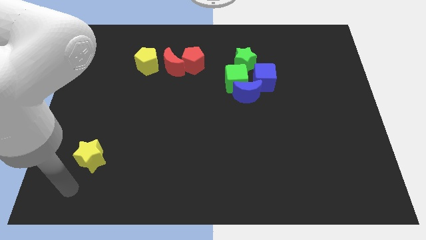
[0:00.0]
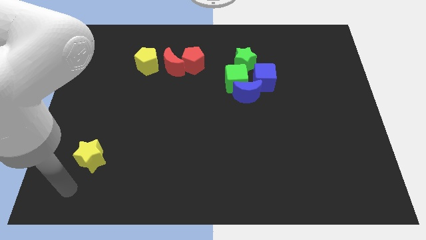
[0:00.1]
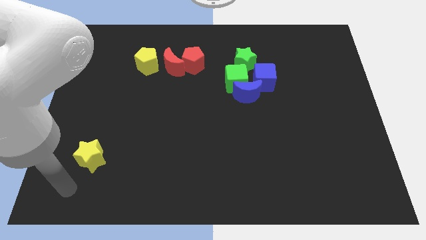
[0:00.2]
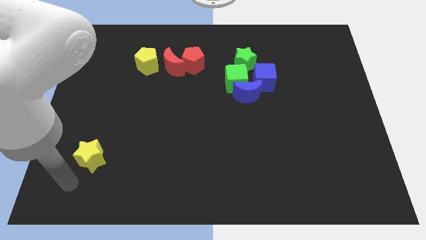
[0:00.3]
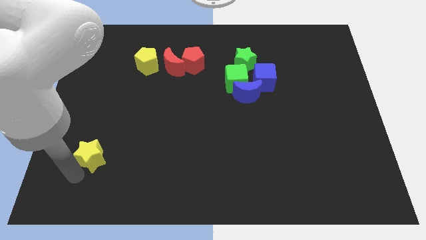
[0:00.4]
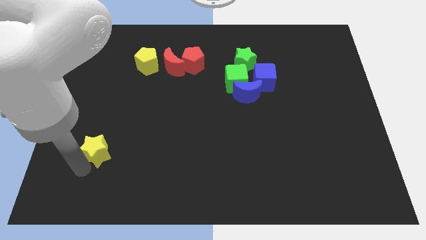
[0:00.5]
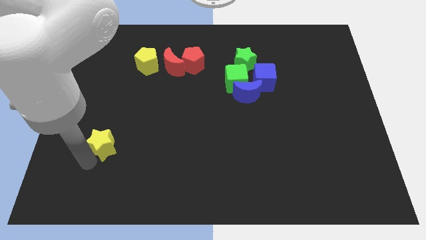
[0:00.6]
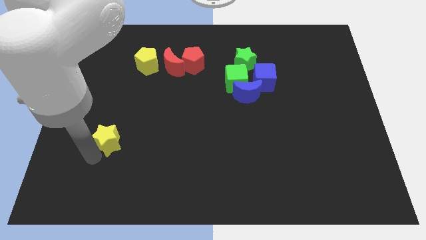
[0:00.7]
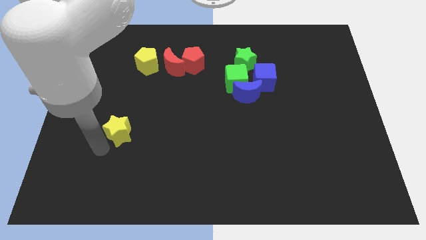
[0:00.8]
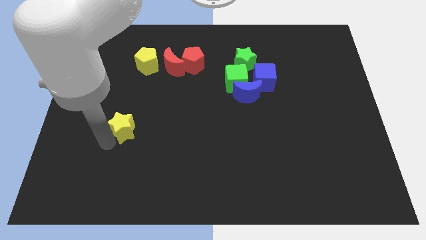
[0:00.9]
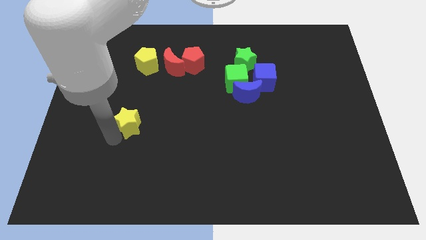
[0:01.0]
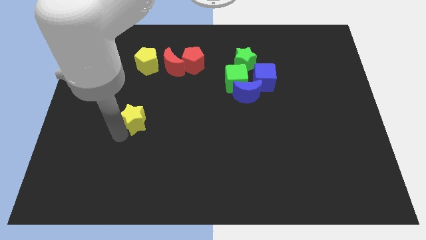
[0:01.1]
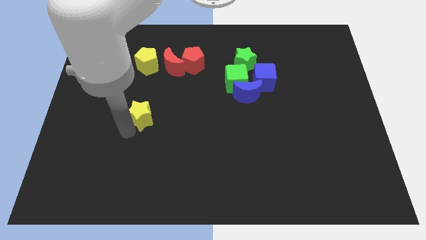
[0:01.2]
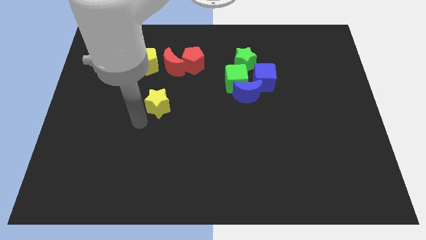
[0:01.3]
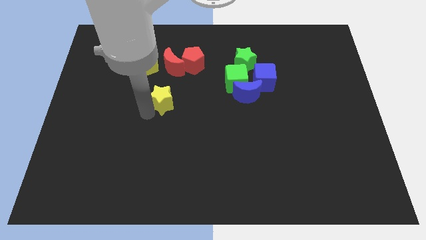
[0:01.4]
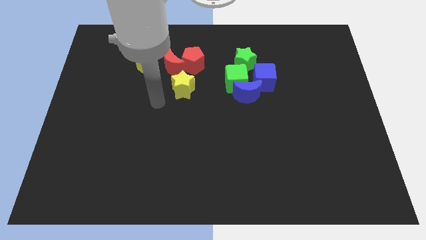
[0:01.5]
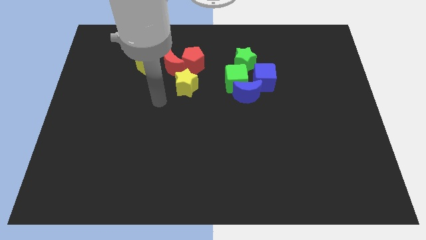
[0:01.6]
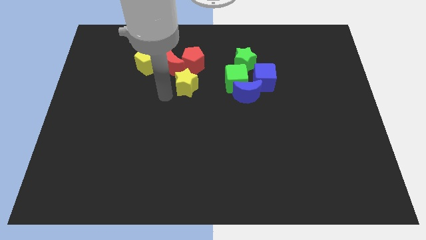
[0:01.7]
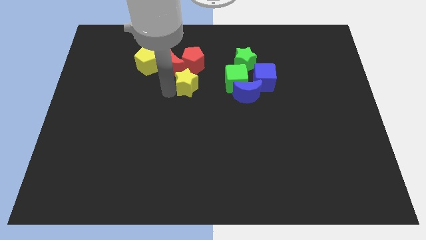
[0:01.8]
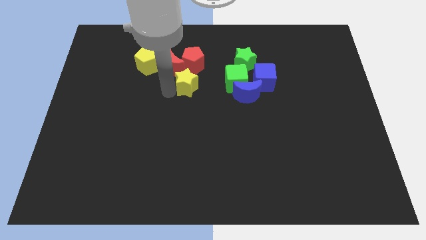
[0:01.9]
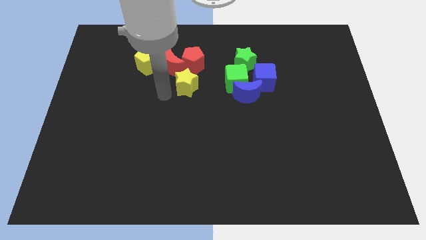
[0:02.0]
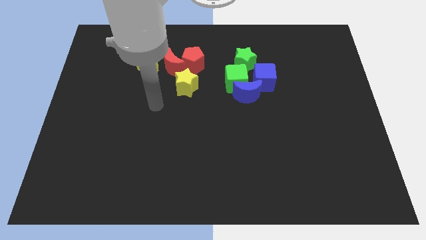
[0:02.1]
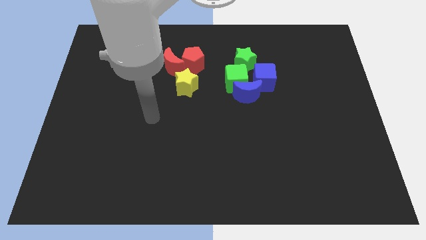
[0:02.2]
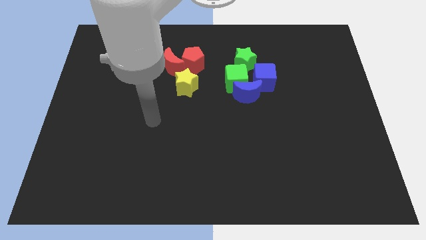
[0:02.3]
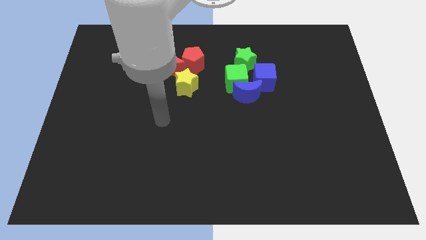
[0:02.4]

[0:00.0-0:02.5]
push the yellow star to the horizontal left of the green cube

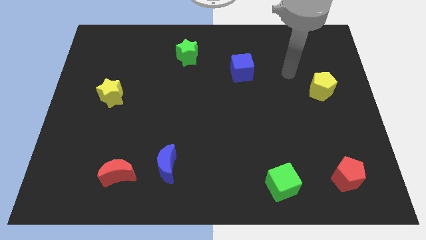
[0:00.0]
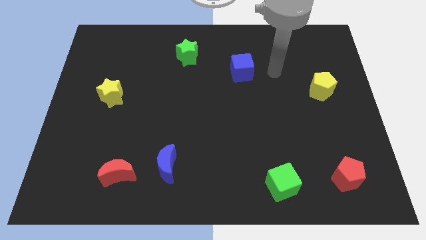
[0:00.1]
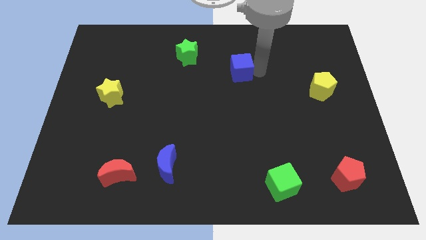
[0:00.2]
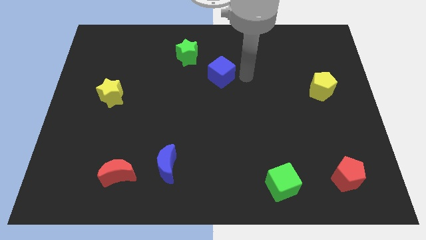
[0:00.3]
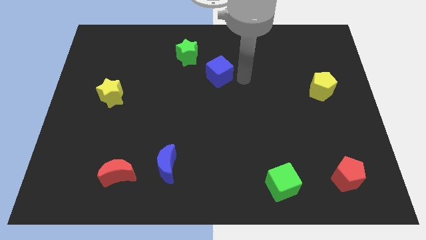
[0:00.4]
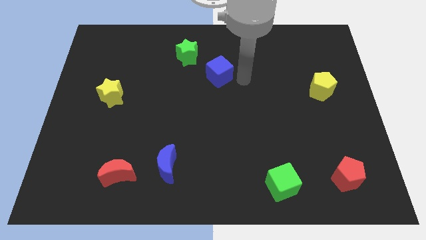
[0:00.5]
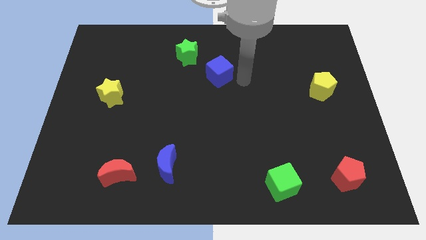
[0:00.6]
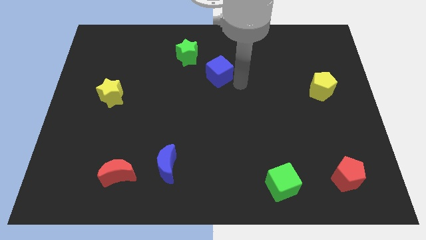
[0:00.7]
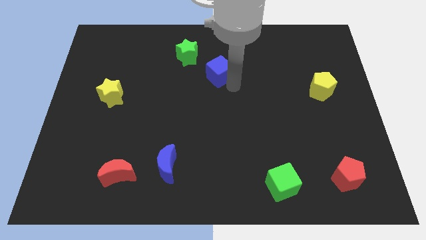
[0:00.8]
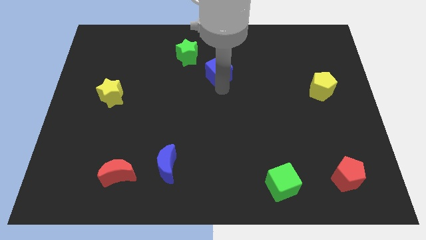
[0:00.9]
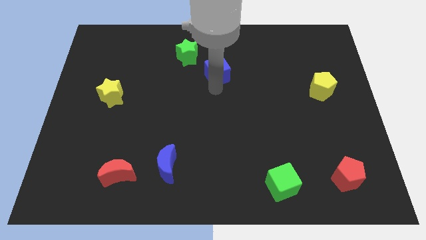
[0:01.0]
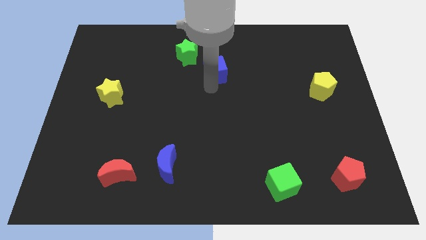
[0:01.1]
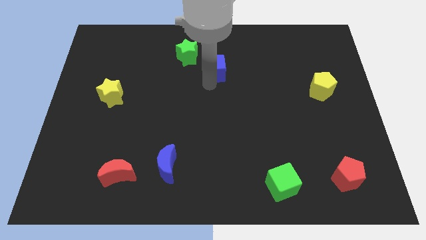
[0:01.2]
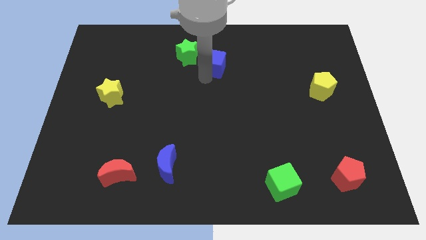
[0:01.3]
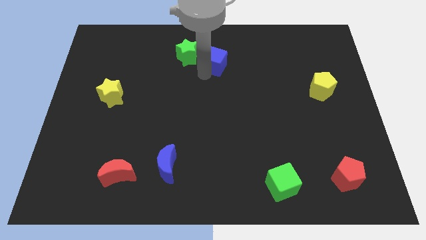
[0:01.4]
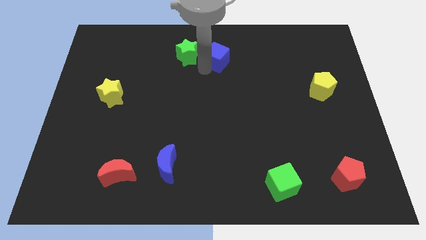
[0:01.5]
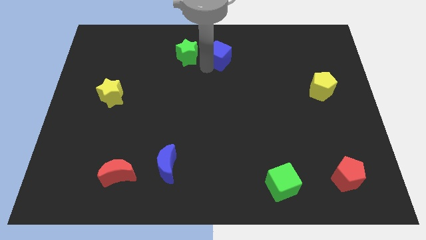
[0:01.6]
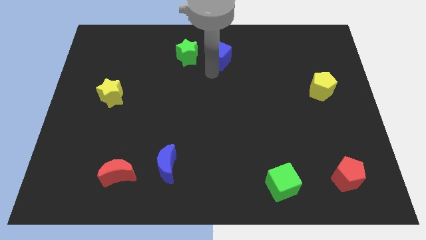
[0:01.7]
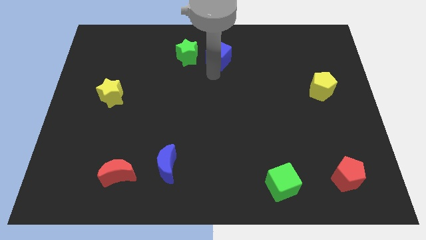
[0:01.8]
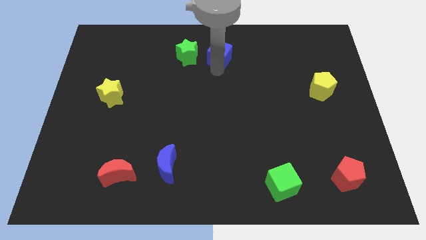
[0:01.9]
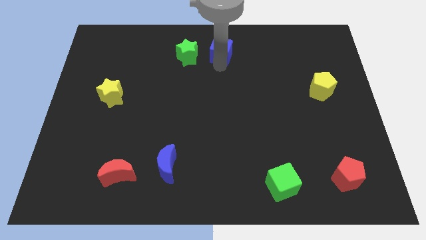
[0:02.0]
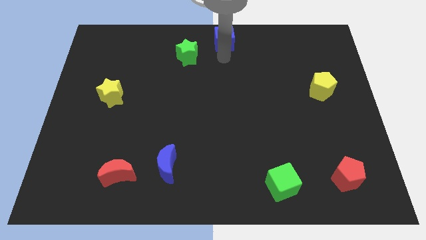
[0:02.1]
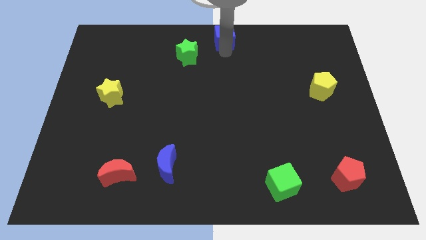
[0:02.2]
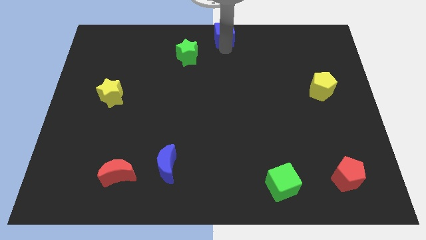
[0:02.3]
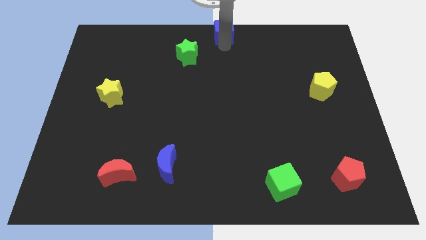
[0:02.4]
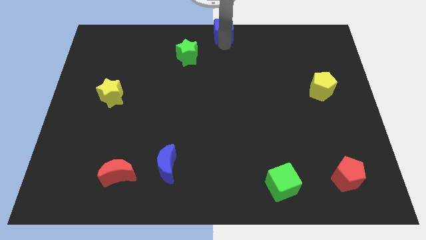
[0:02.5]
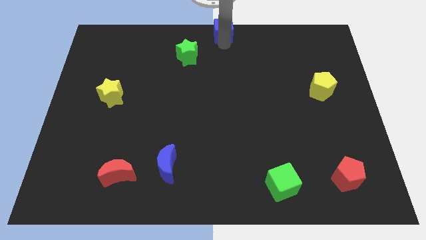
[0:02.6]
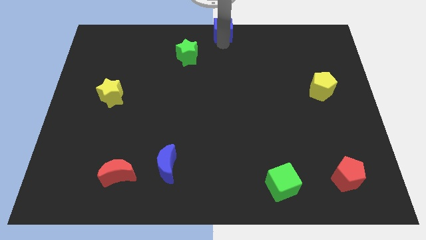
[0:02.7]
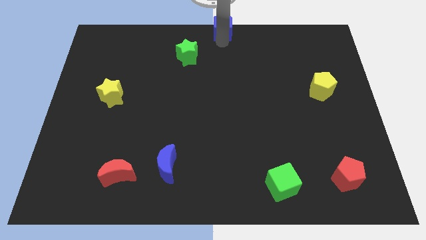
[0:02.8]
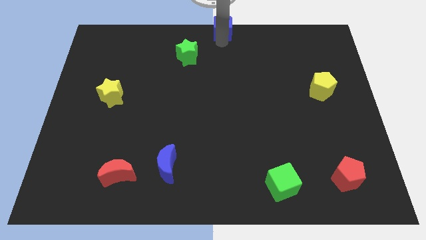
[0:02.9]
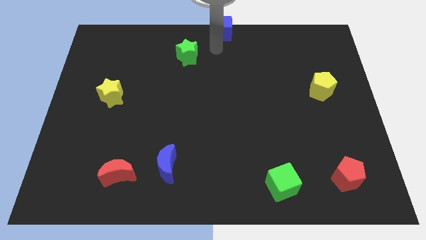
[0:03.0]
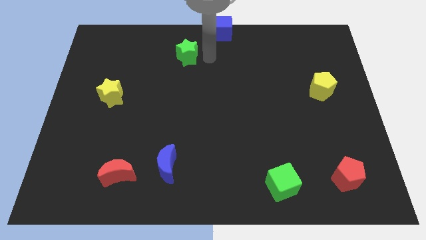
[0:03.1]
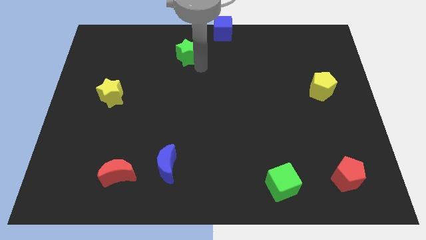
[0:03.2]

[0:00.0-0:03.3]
move blue cube to center top

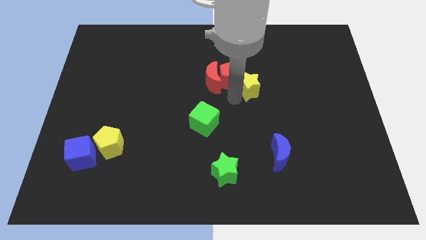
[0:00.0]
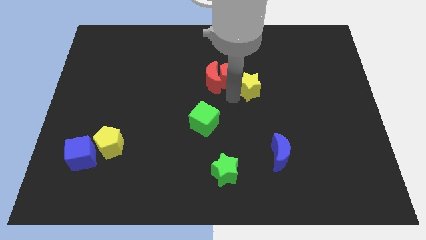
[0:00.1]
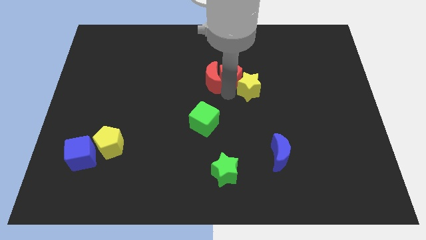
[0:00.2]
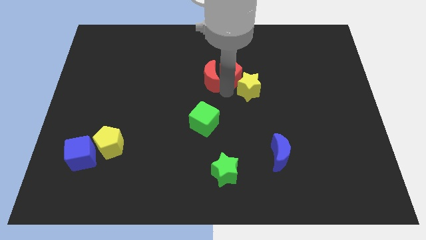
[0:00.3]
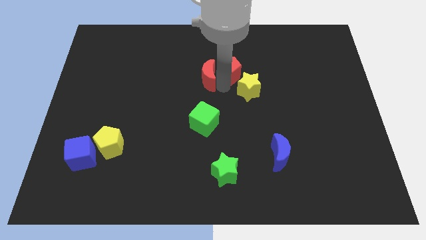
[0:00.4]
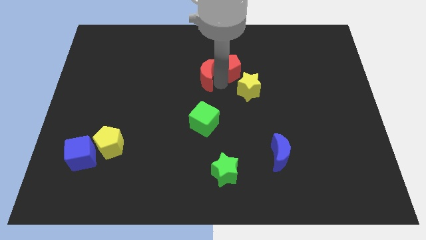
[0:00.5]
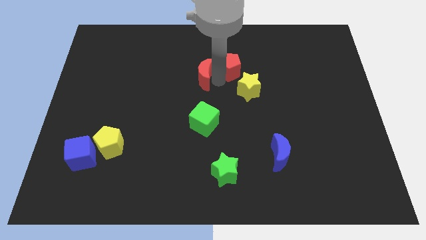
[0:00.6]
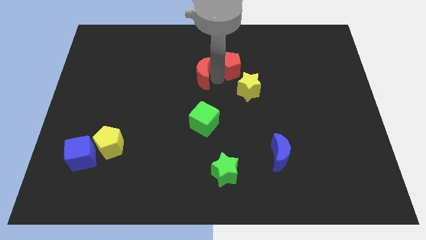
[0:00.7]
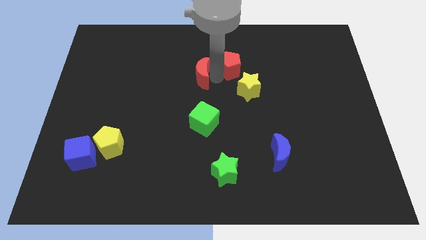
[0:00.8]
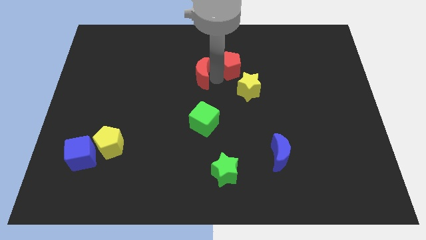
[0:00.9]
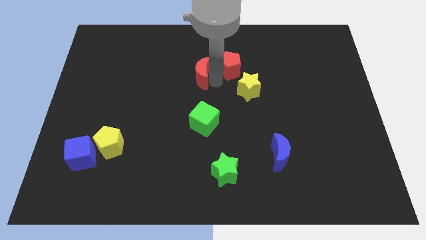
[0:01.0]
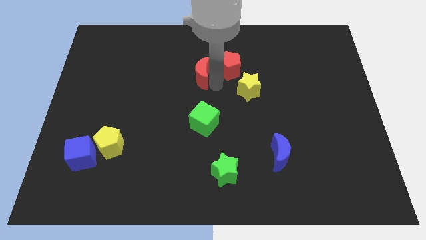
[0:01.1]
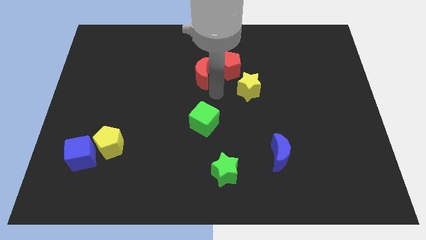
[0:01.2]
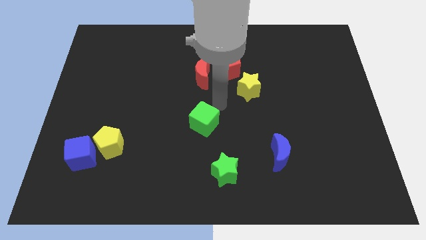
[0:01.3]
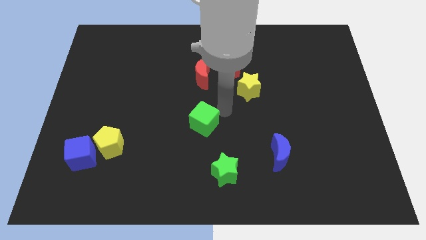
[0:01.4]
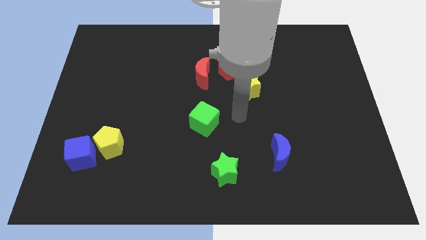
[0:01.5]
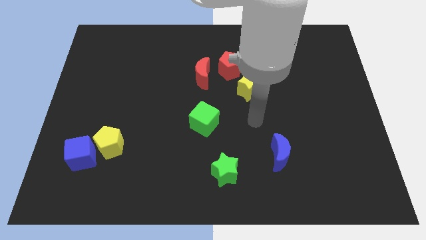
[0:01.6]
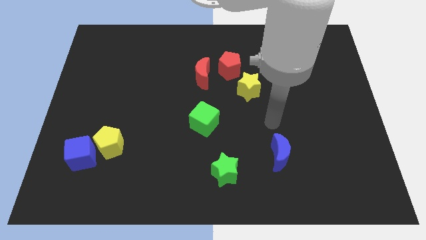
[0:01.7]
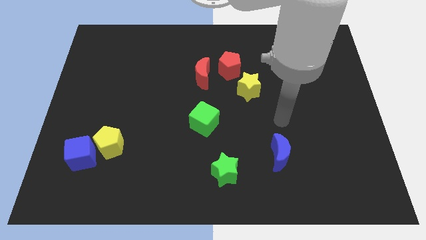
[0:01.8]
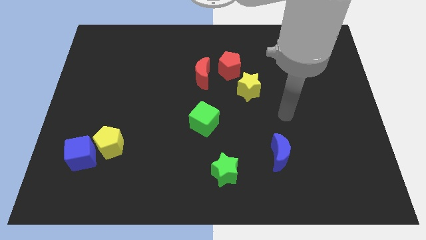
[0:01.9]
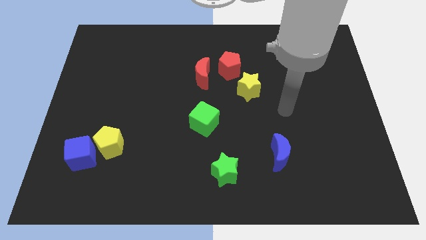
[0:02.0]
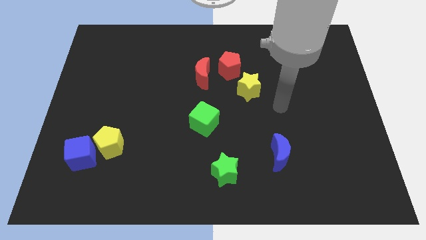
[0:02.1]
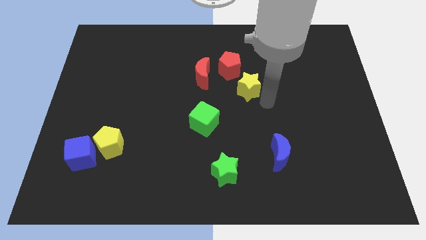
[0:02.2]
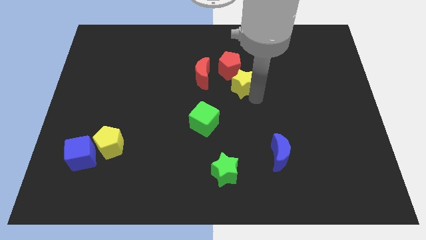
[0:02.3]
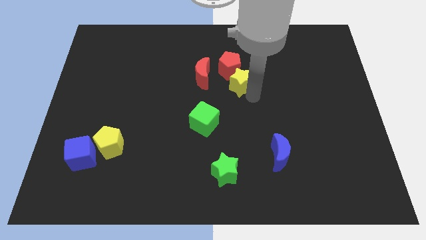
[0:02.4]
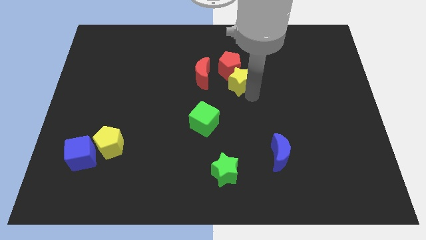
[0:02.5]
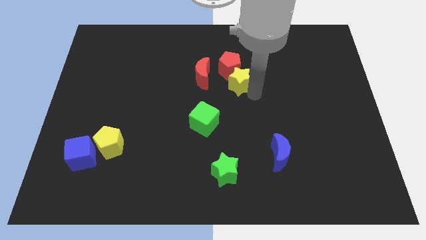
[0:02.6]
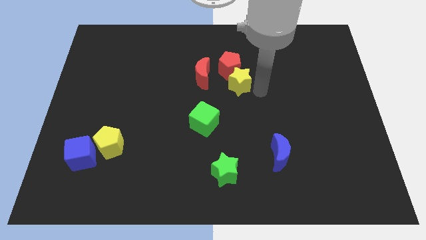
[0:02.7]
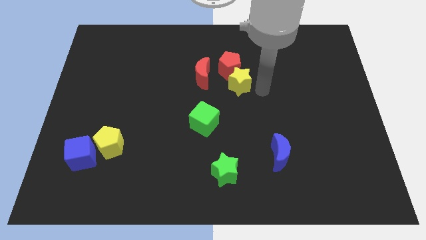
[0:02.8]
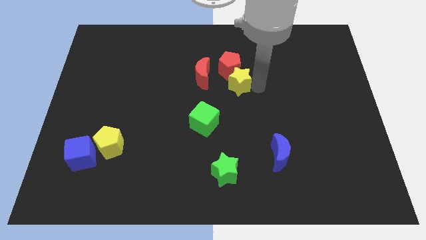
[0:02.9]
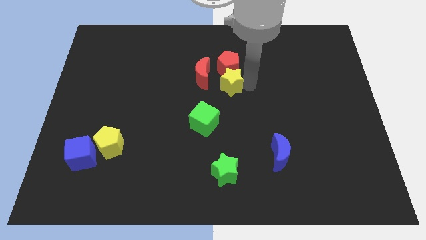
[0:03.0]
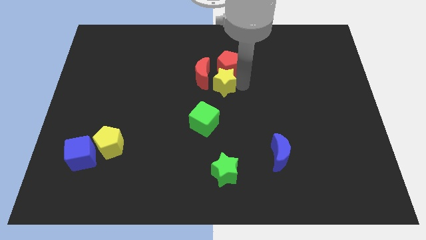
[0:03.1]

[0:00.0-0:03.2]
push the yellow star to the bottom side of the red pentagon
